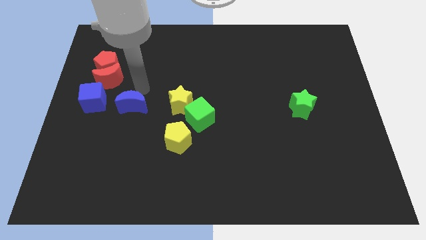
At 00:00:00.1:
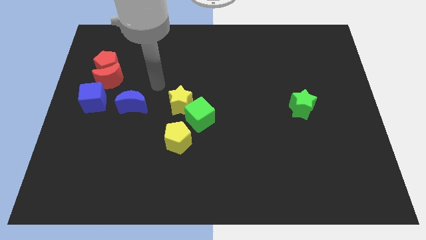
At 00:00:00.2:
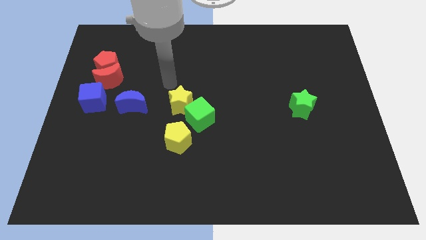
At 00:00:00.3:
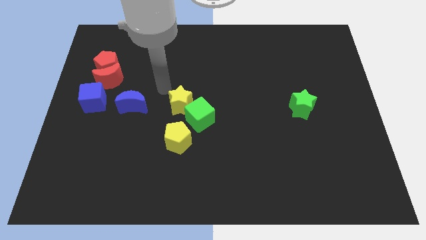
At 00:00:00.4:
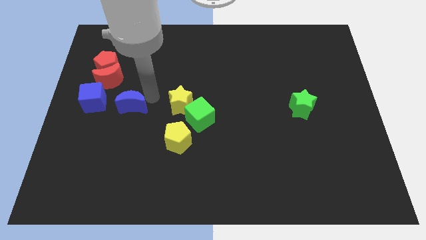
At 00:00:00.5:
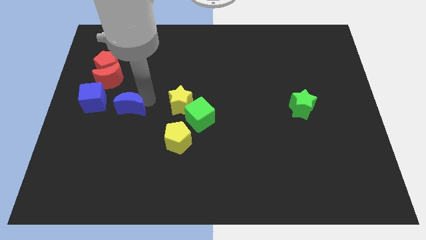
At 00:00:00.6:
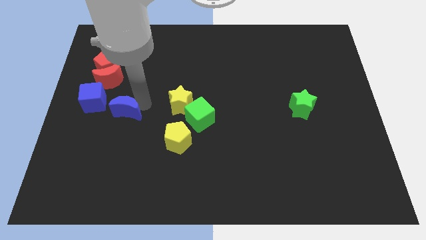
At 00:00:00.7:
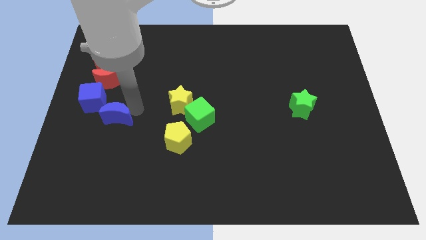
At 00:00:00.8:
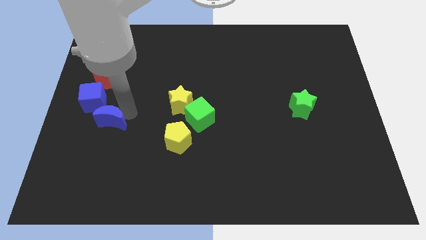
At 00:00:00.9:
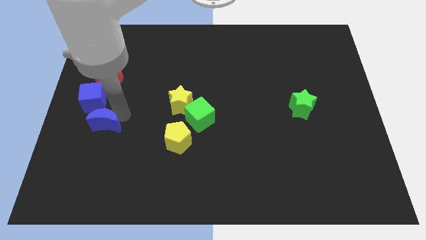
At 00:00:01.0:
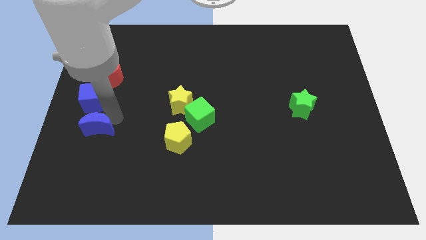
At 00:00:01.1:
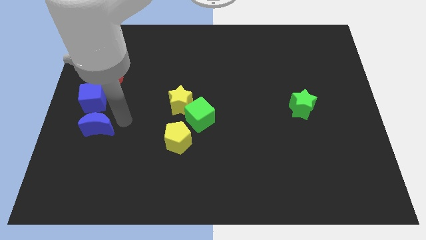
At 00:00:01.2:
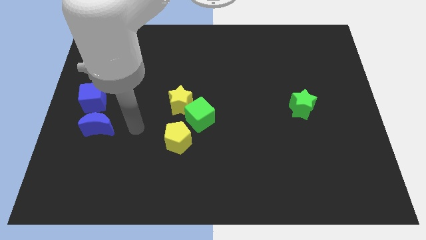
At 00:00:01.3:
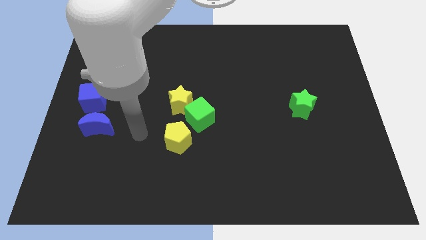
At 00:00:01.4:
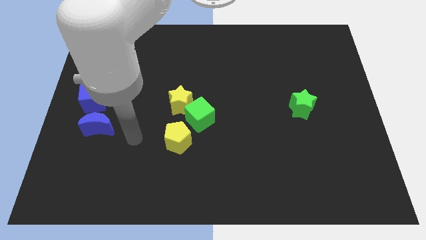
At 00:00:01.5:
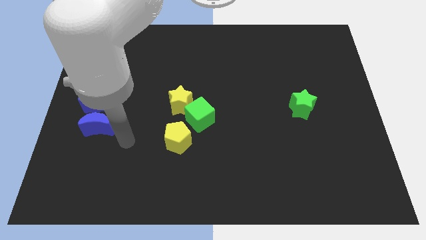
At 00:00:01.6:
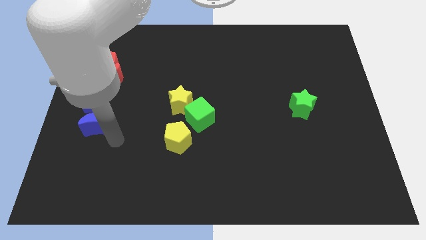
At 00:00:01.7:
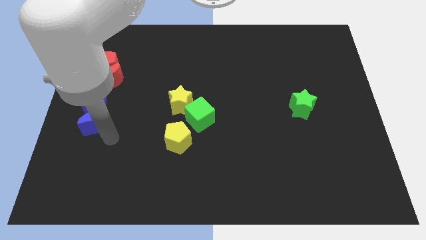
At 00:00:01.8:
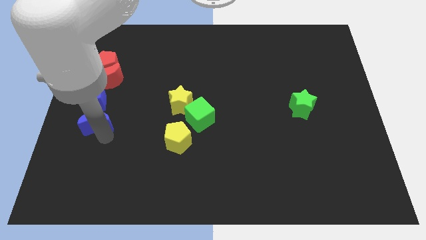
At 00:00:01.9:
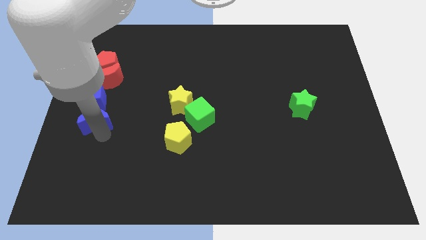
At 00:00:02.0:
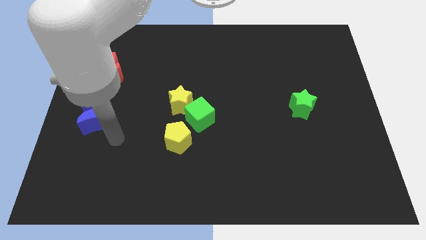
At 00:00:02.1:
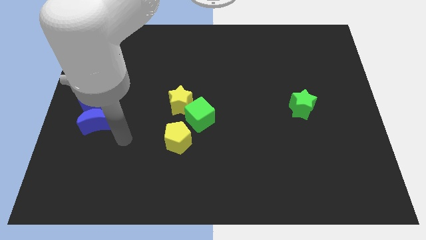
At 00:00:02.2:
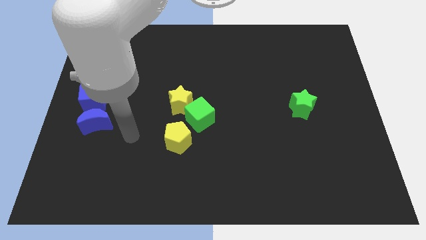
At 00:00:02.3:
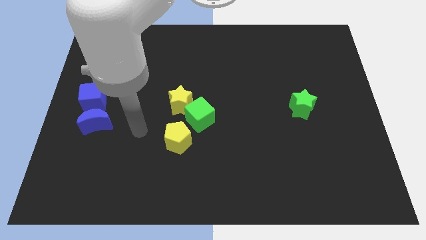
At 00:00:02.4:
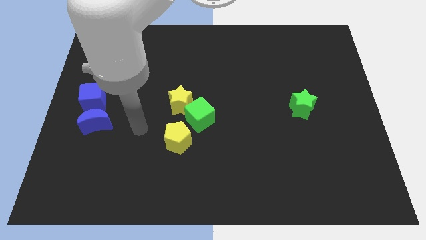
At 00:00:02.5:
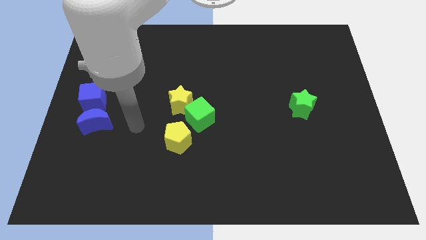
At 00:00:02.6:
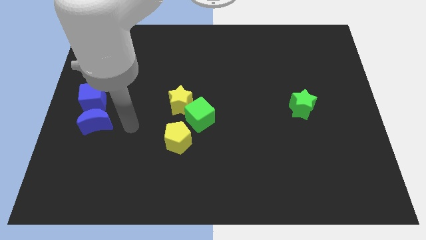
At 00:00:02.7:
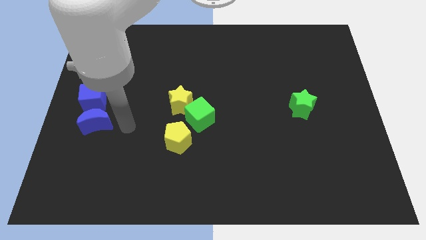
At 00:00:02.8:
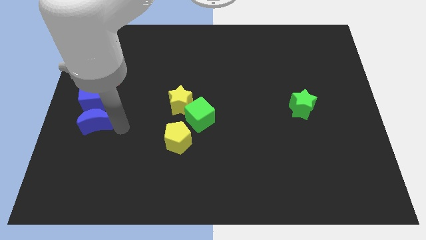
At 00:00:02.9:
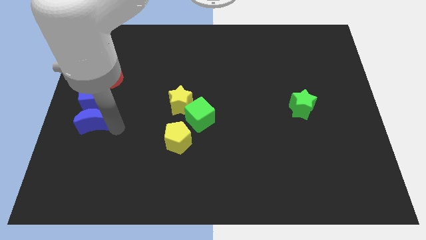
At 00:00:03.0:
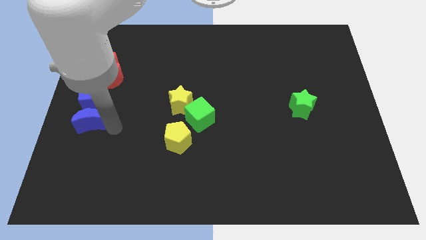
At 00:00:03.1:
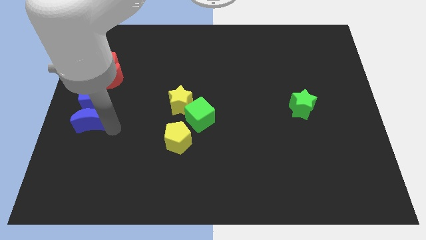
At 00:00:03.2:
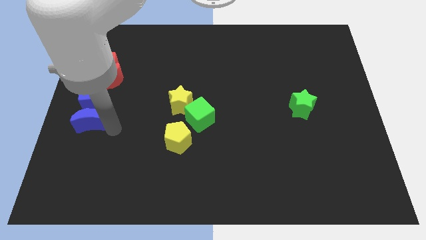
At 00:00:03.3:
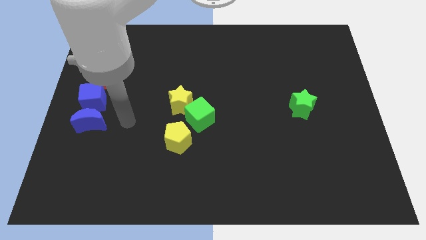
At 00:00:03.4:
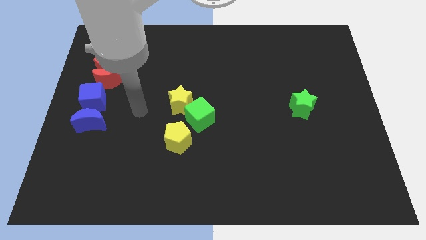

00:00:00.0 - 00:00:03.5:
place the blue crescent at the bottom side of the blue cube

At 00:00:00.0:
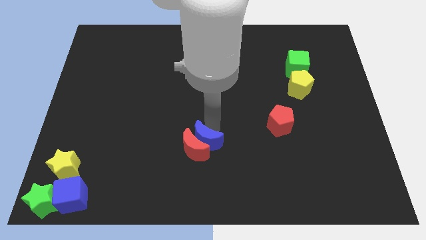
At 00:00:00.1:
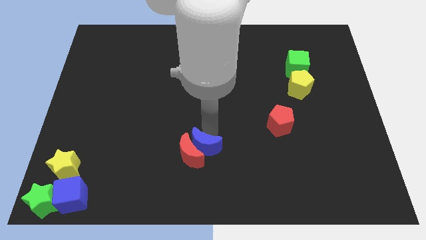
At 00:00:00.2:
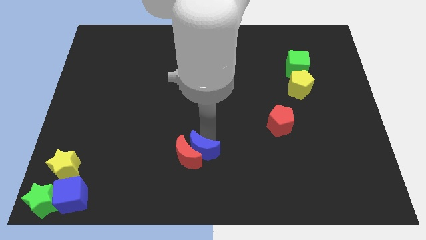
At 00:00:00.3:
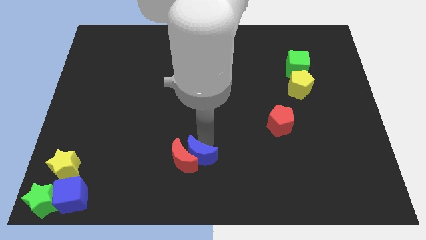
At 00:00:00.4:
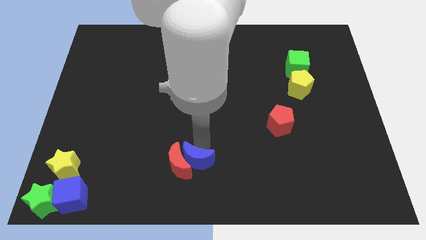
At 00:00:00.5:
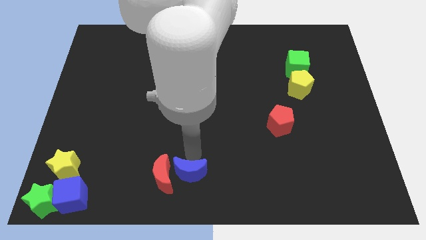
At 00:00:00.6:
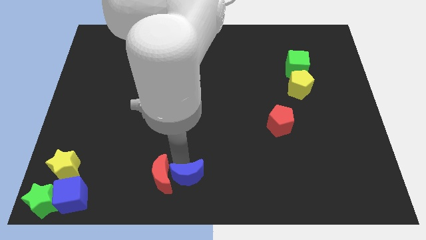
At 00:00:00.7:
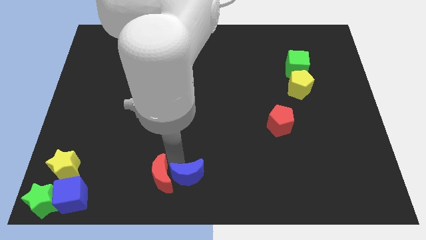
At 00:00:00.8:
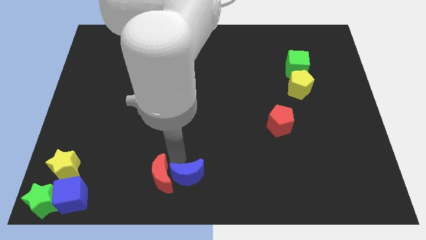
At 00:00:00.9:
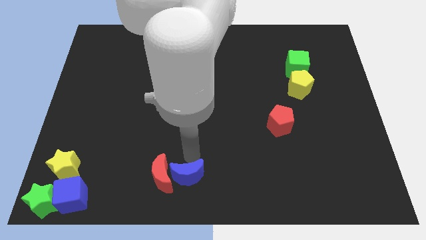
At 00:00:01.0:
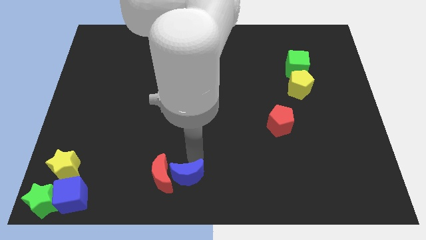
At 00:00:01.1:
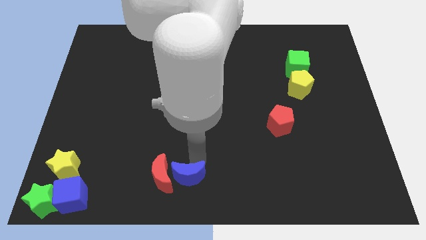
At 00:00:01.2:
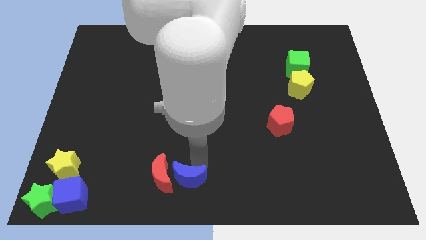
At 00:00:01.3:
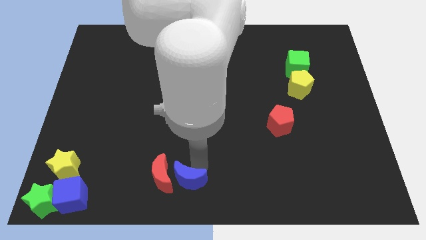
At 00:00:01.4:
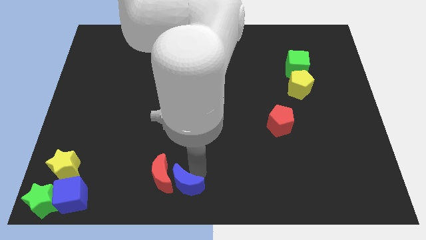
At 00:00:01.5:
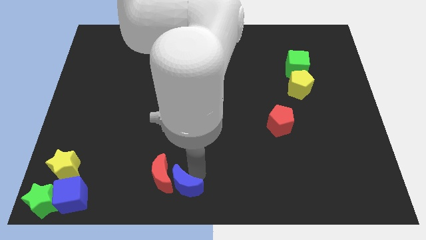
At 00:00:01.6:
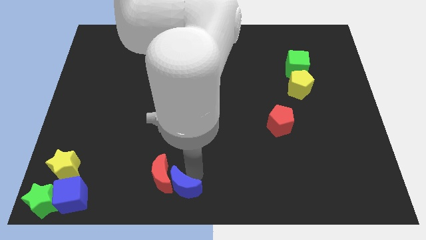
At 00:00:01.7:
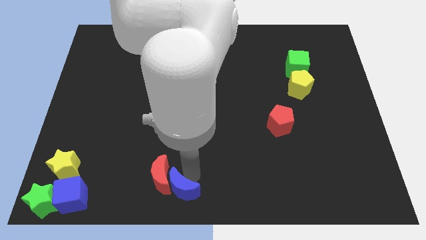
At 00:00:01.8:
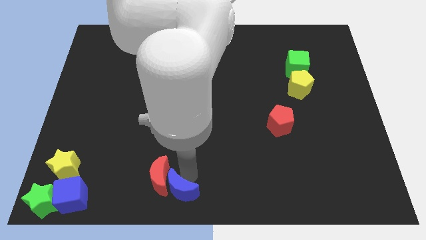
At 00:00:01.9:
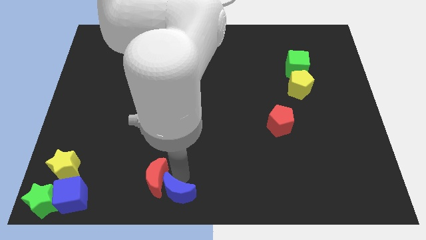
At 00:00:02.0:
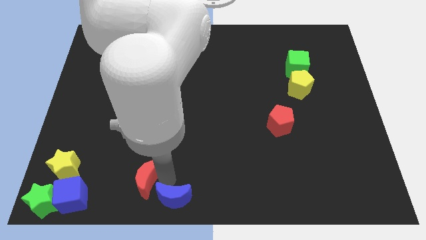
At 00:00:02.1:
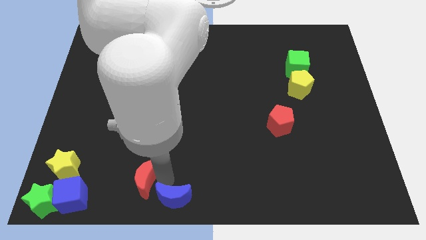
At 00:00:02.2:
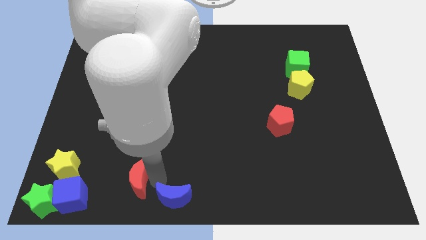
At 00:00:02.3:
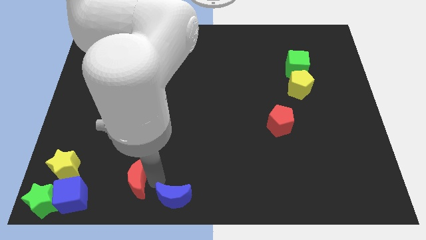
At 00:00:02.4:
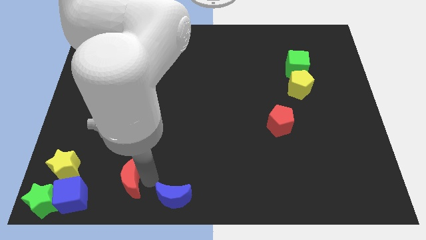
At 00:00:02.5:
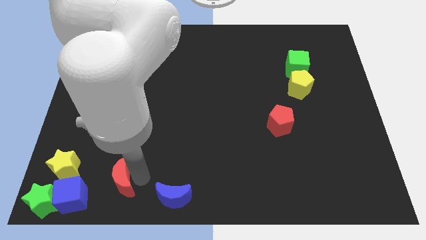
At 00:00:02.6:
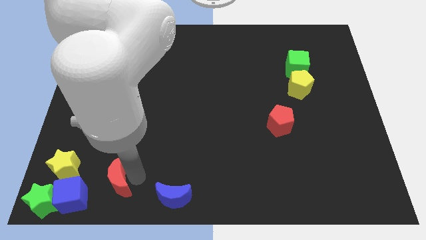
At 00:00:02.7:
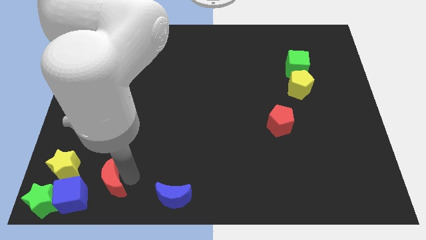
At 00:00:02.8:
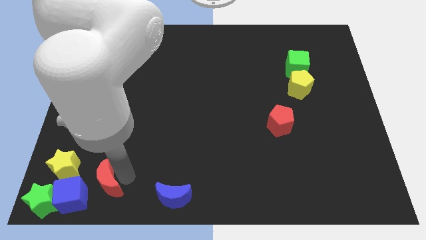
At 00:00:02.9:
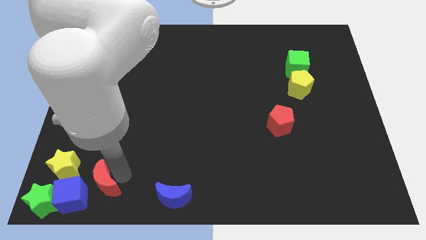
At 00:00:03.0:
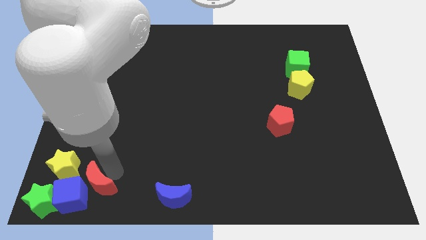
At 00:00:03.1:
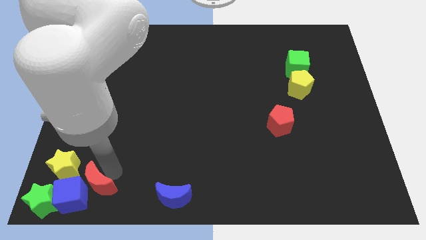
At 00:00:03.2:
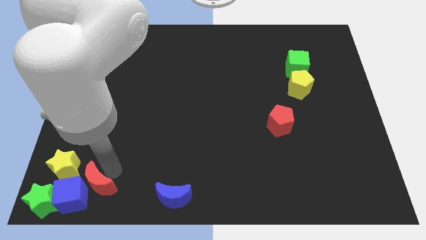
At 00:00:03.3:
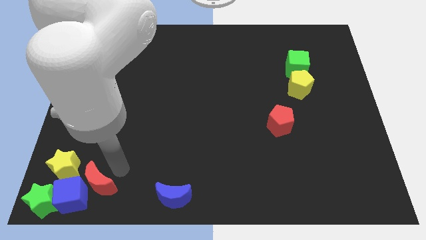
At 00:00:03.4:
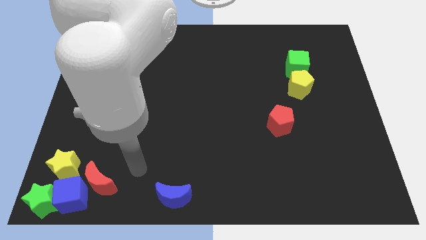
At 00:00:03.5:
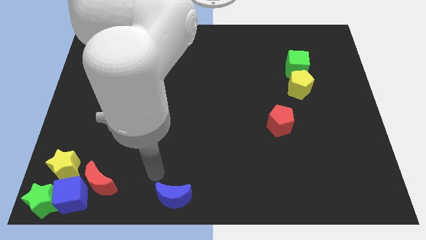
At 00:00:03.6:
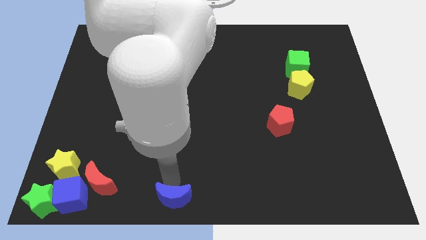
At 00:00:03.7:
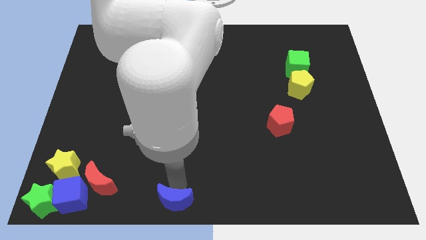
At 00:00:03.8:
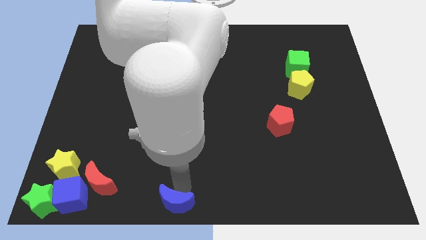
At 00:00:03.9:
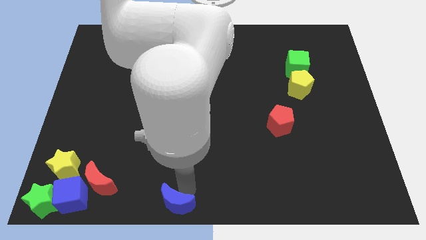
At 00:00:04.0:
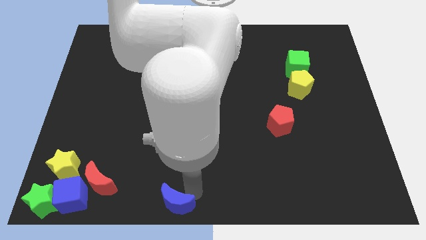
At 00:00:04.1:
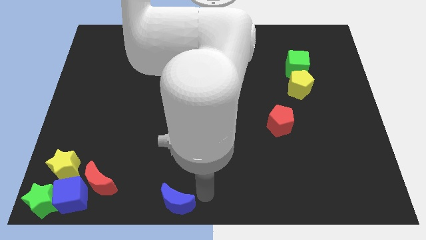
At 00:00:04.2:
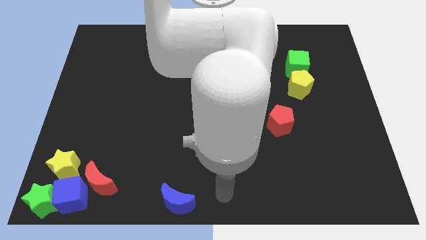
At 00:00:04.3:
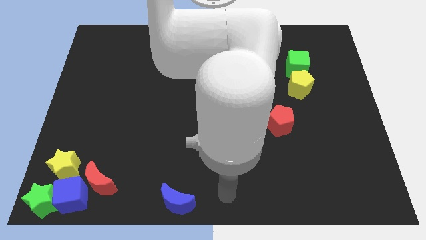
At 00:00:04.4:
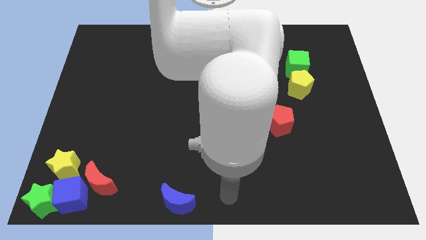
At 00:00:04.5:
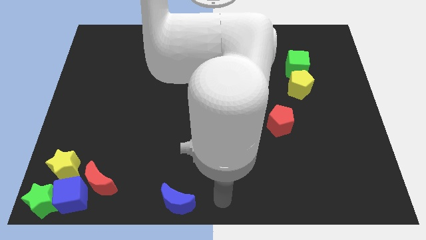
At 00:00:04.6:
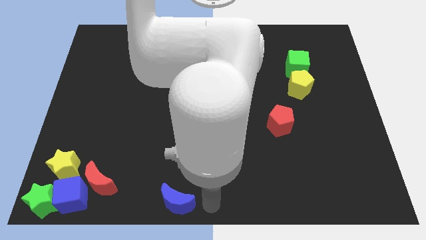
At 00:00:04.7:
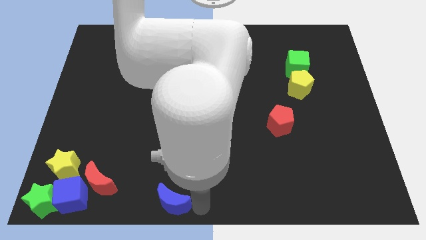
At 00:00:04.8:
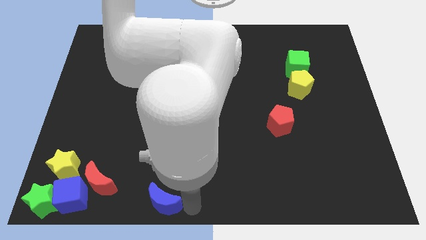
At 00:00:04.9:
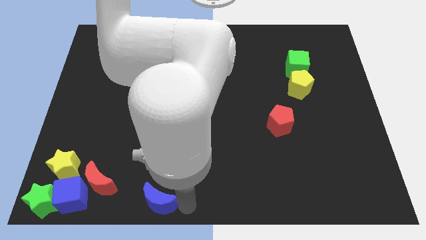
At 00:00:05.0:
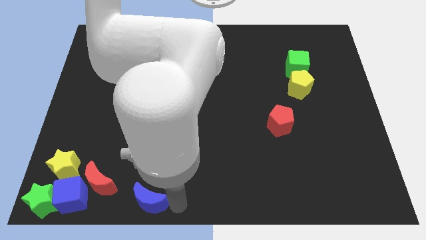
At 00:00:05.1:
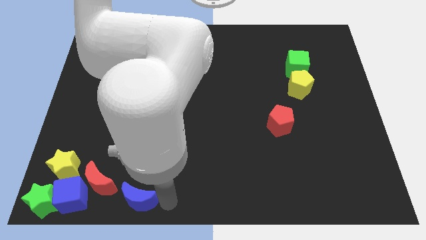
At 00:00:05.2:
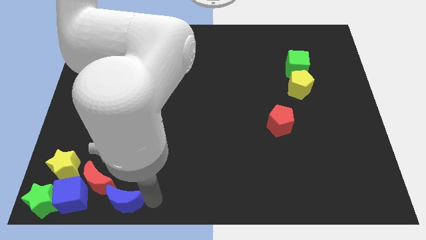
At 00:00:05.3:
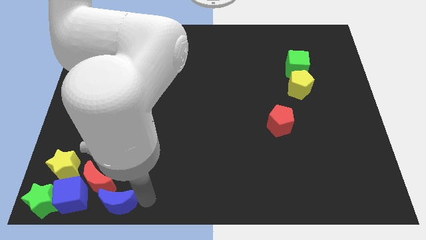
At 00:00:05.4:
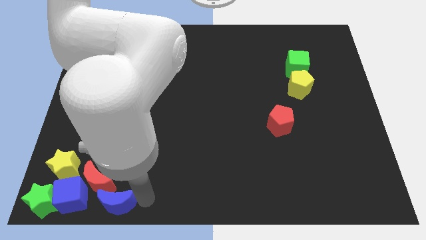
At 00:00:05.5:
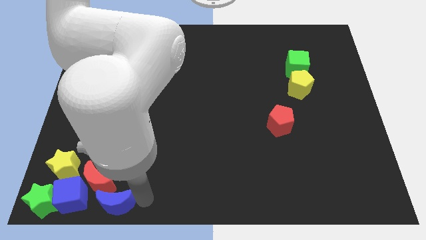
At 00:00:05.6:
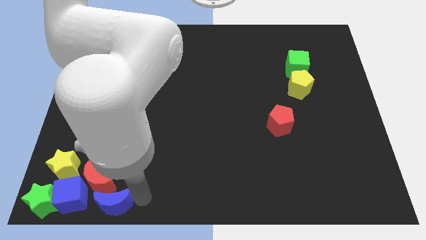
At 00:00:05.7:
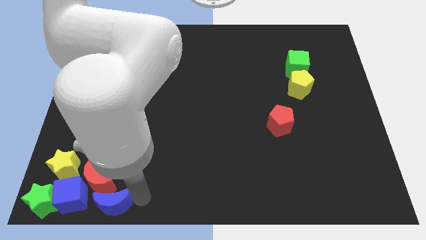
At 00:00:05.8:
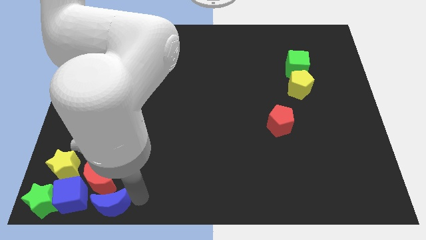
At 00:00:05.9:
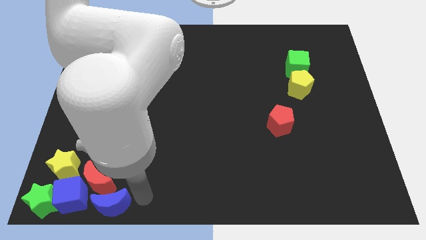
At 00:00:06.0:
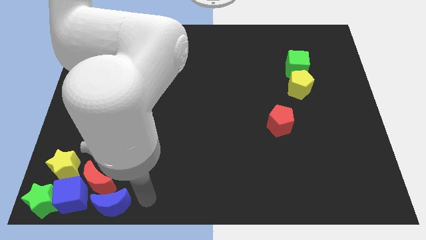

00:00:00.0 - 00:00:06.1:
place the red and blue crescent near the blue cube
